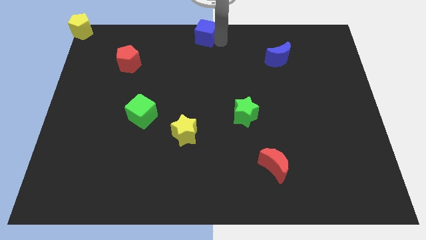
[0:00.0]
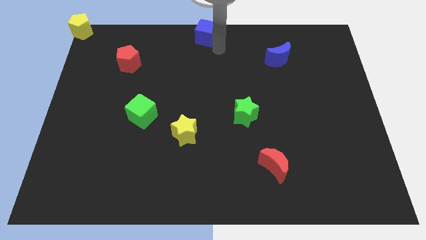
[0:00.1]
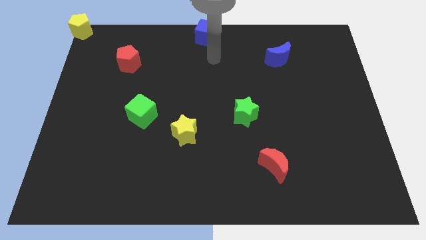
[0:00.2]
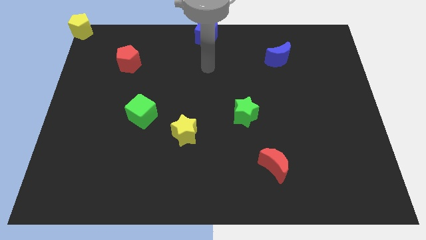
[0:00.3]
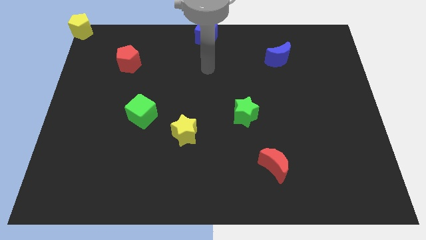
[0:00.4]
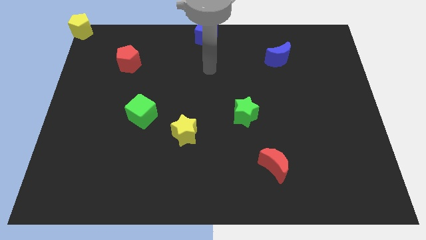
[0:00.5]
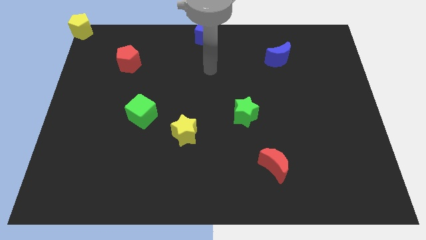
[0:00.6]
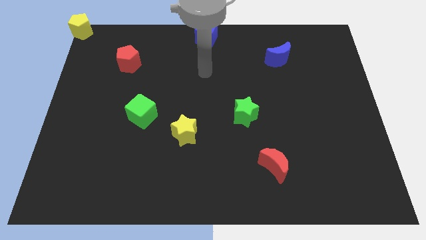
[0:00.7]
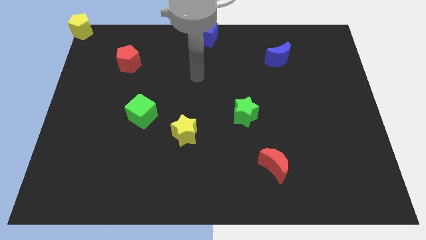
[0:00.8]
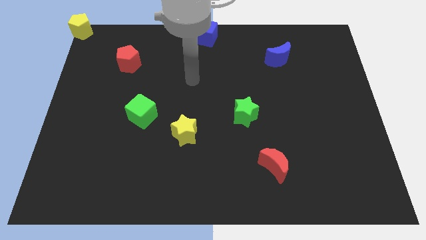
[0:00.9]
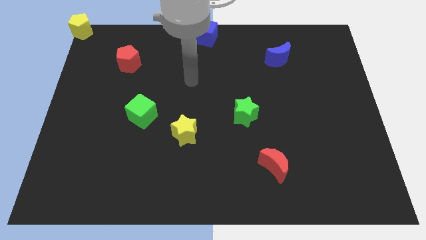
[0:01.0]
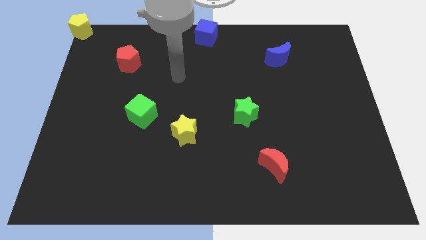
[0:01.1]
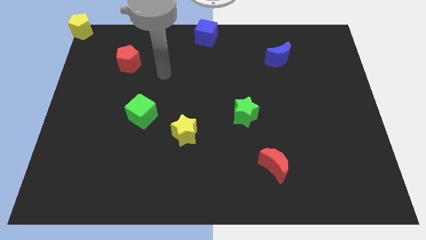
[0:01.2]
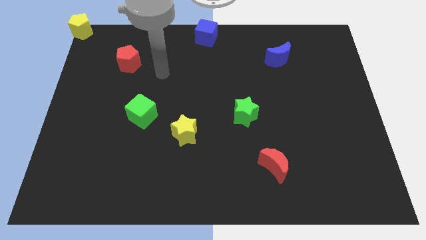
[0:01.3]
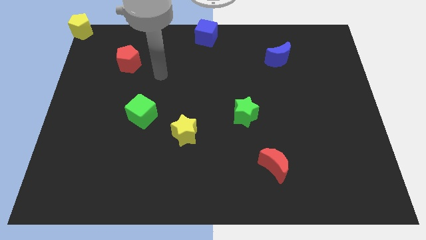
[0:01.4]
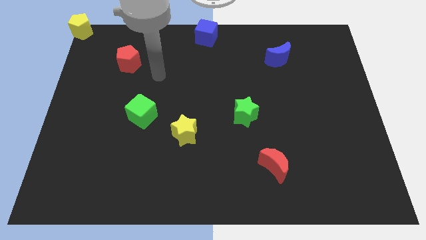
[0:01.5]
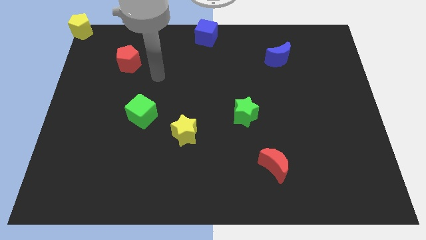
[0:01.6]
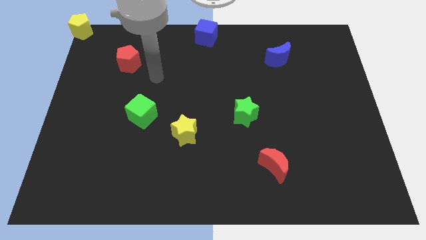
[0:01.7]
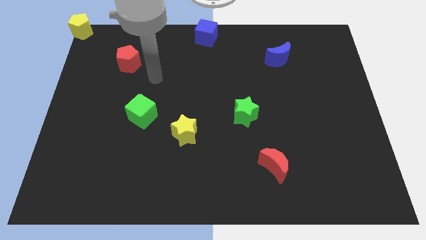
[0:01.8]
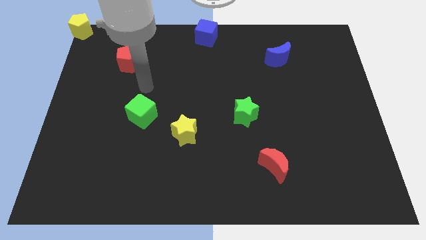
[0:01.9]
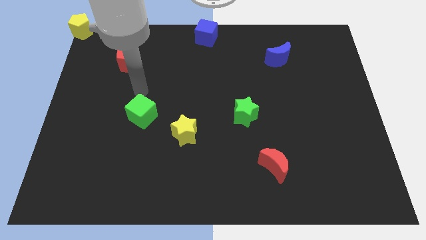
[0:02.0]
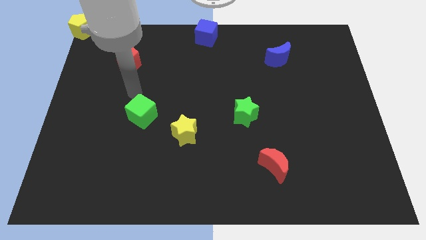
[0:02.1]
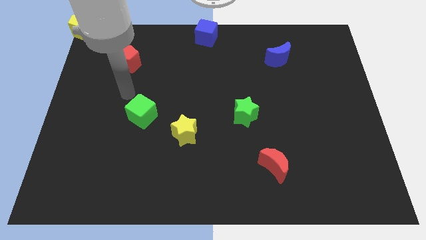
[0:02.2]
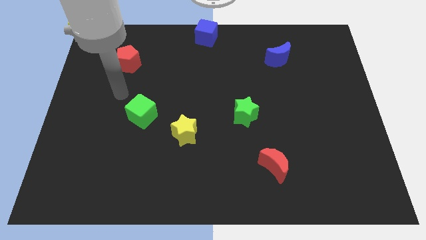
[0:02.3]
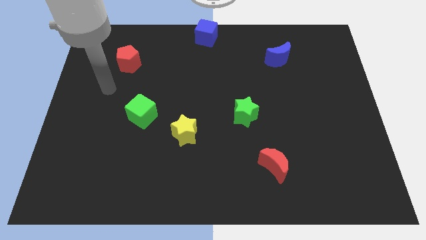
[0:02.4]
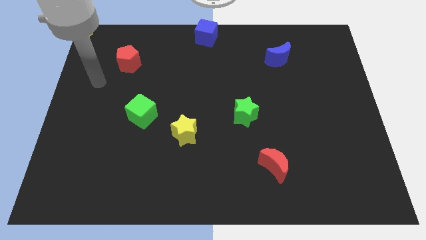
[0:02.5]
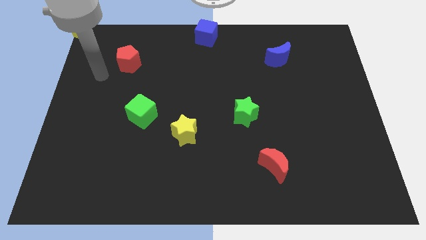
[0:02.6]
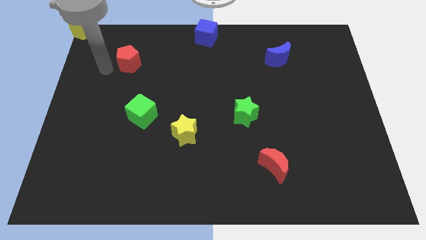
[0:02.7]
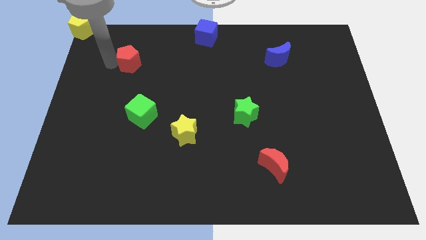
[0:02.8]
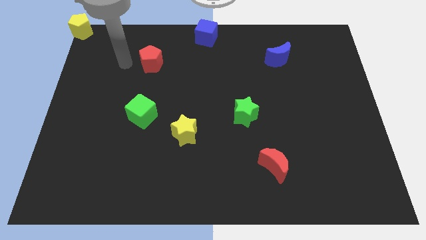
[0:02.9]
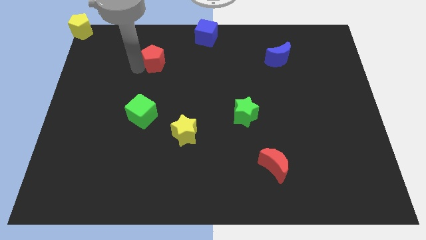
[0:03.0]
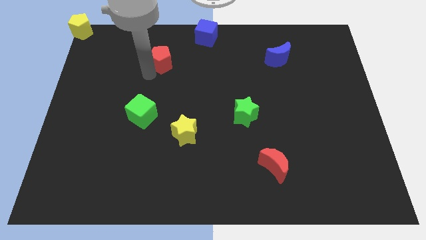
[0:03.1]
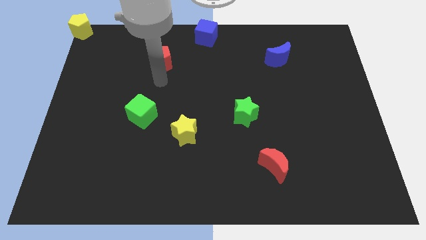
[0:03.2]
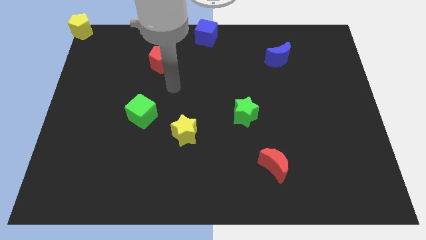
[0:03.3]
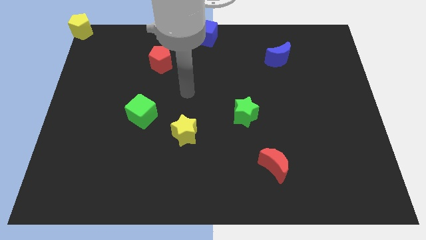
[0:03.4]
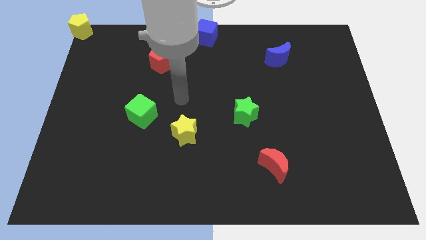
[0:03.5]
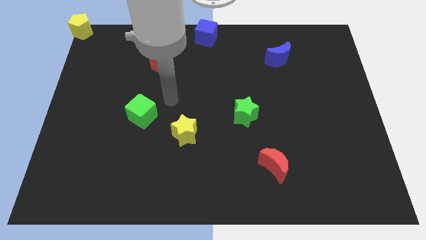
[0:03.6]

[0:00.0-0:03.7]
place the red pentagon diagonally to blue cube

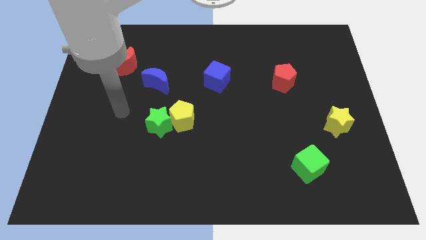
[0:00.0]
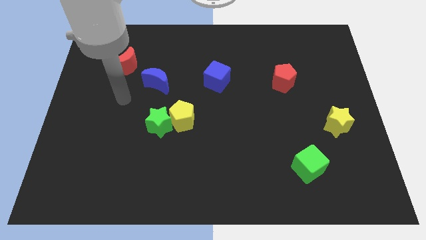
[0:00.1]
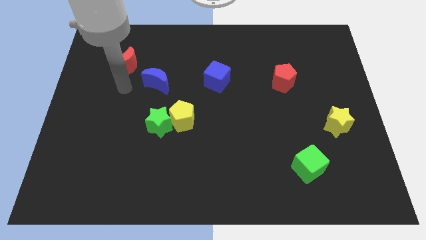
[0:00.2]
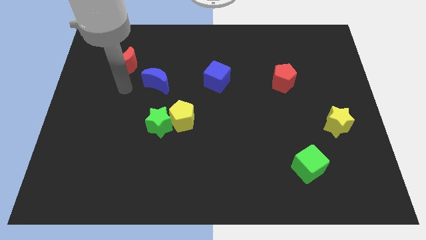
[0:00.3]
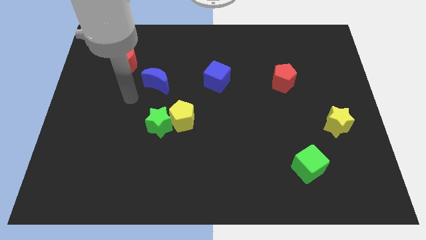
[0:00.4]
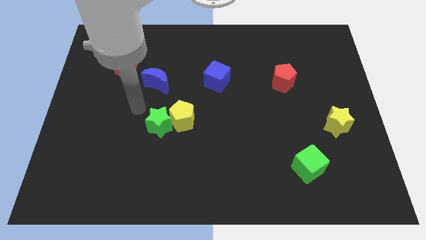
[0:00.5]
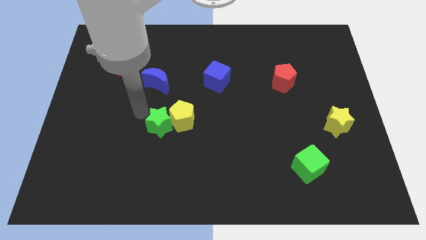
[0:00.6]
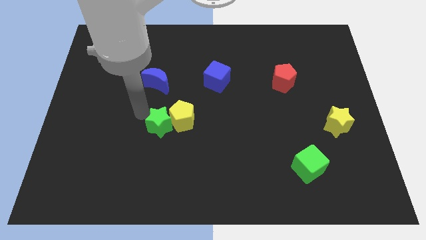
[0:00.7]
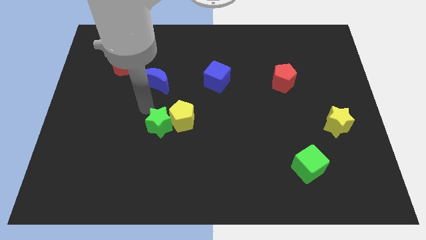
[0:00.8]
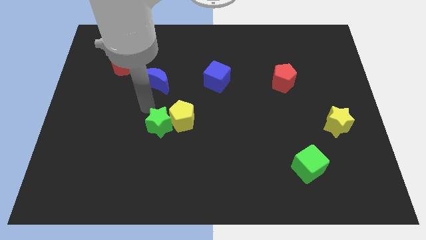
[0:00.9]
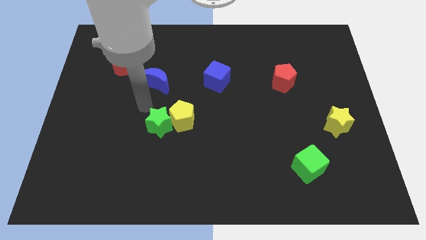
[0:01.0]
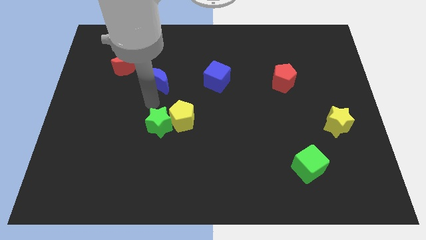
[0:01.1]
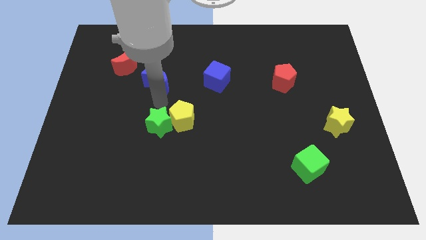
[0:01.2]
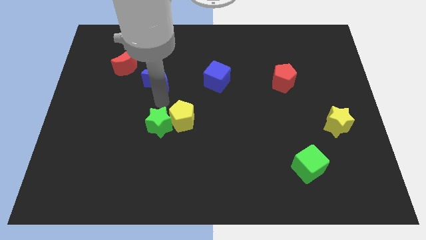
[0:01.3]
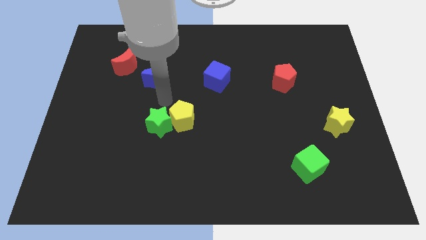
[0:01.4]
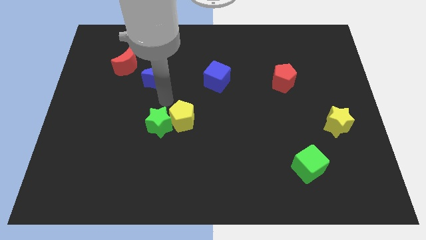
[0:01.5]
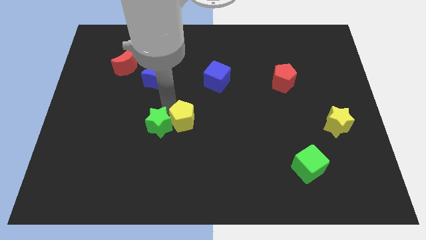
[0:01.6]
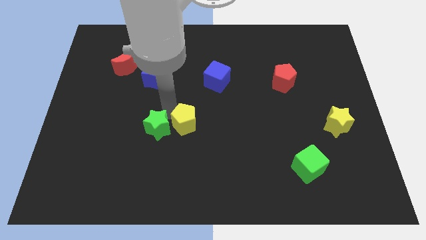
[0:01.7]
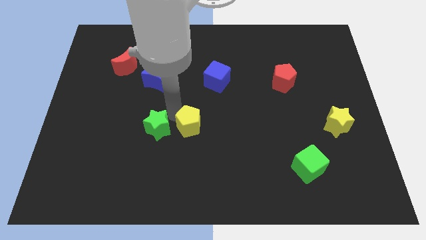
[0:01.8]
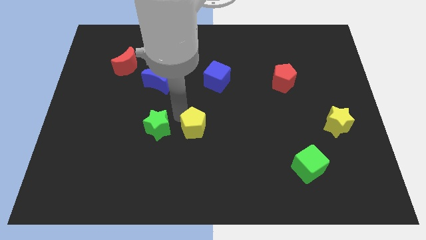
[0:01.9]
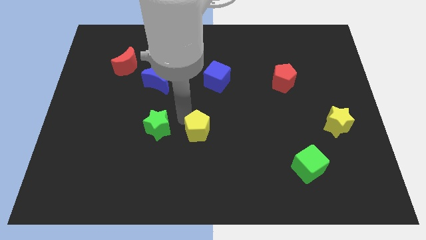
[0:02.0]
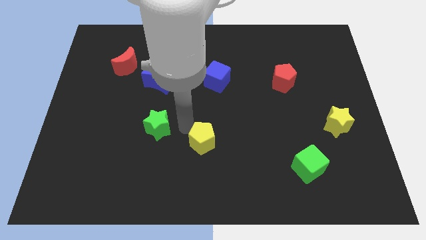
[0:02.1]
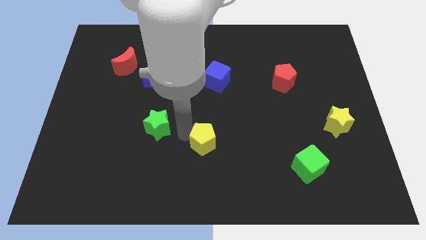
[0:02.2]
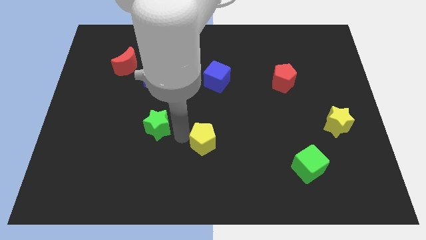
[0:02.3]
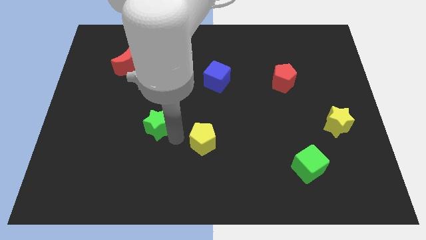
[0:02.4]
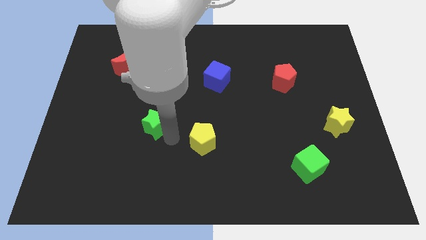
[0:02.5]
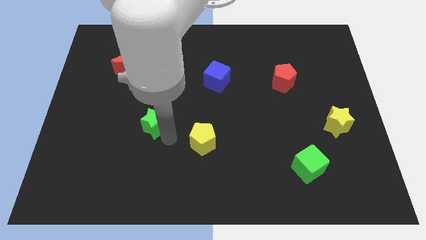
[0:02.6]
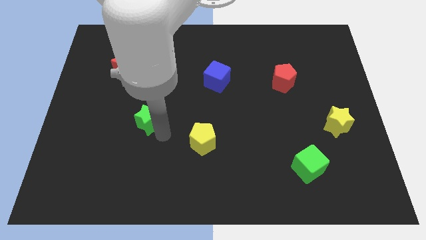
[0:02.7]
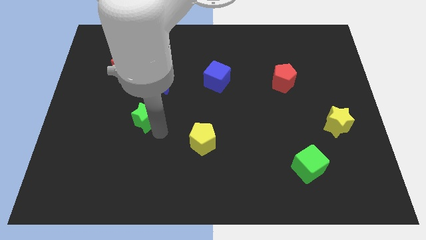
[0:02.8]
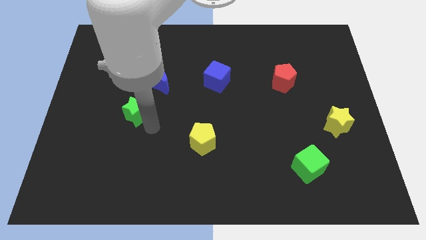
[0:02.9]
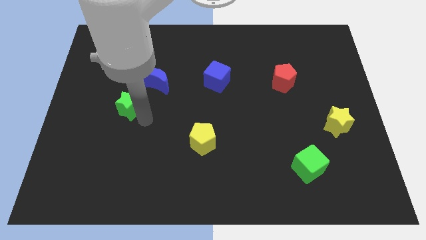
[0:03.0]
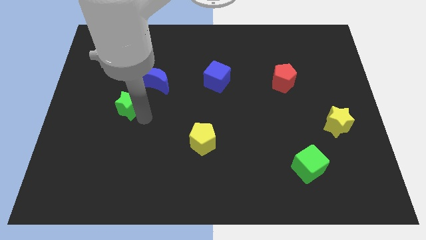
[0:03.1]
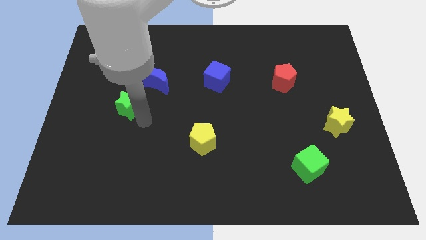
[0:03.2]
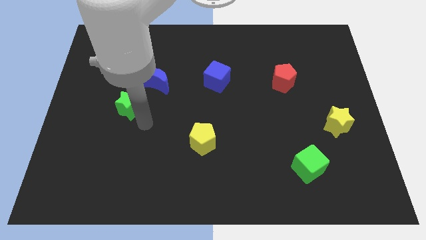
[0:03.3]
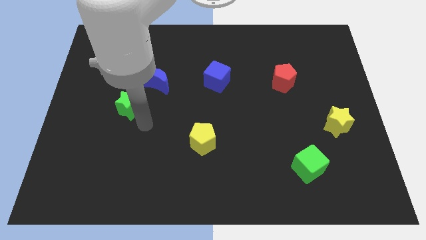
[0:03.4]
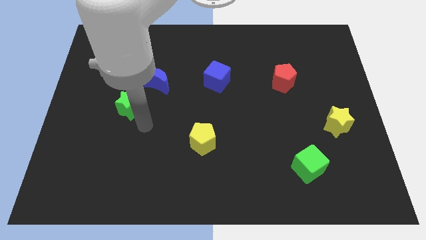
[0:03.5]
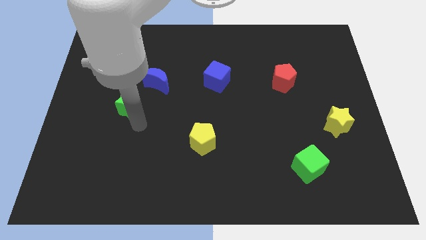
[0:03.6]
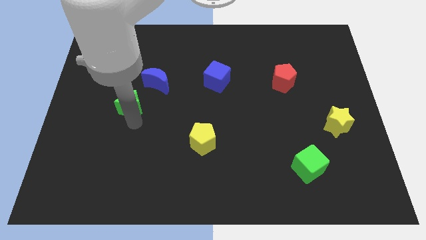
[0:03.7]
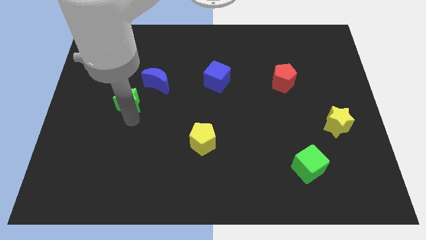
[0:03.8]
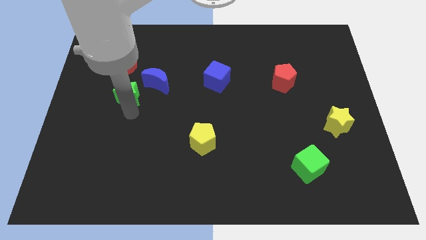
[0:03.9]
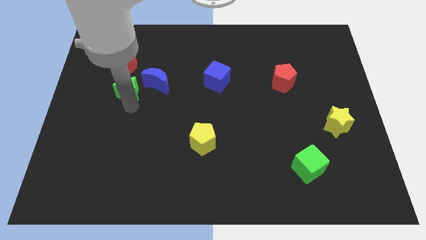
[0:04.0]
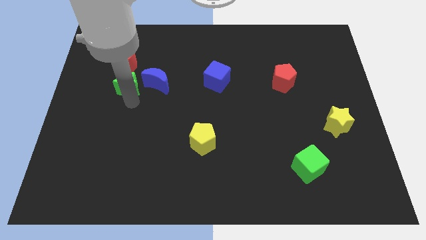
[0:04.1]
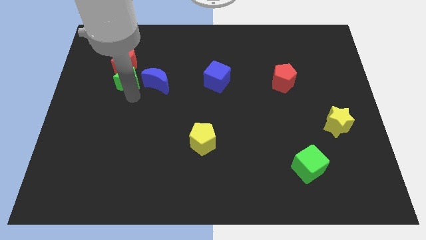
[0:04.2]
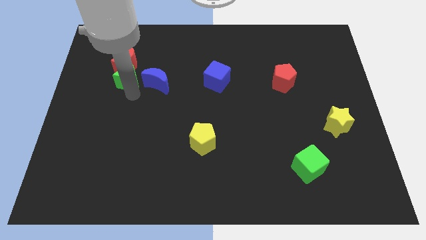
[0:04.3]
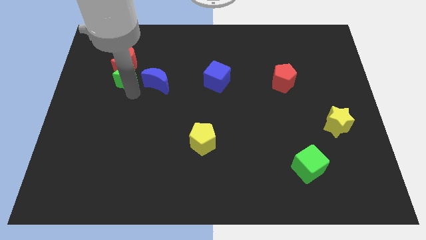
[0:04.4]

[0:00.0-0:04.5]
push the green star to the bottom of the red crescent

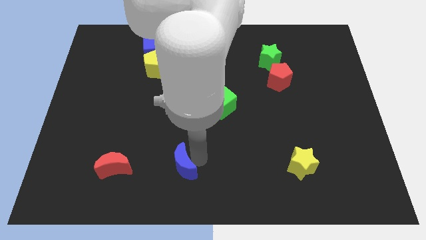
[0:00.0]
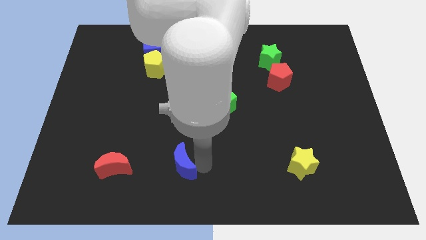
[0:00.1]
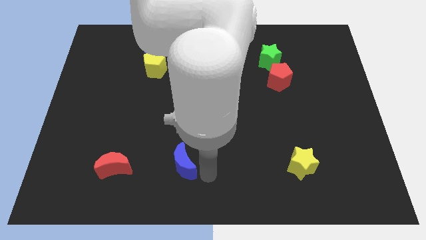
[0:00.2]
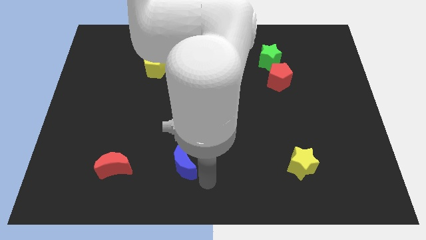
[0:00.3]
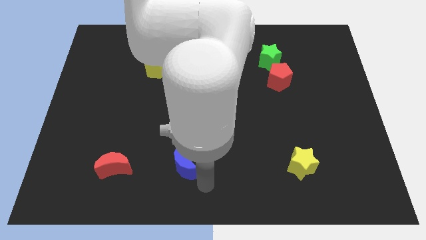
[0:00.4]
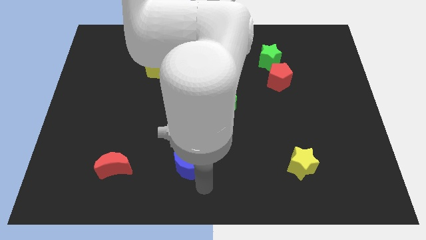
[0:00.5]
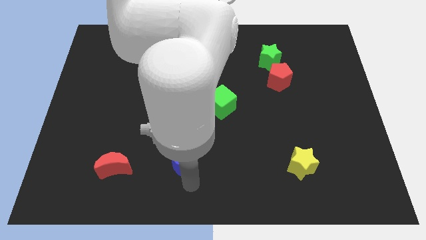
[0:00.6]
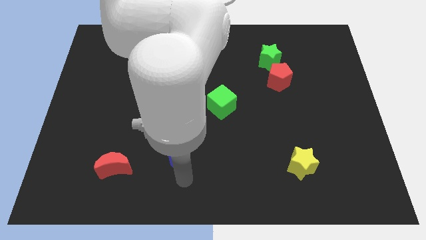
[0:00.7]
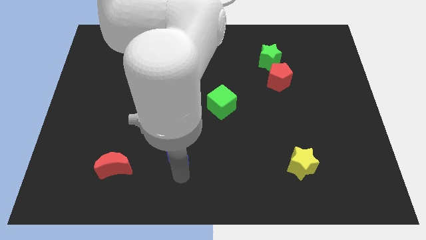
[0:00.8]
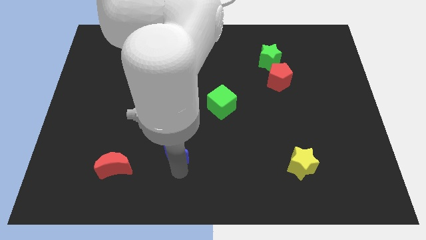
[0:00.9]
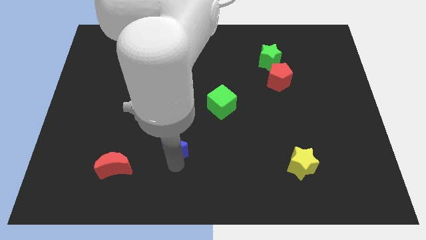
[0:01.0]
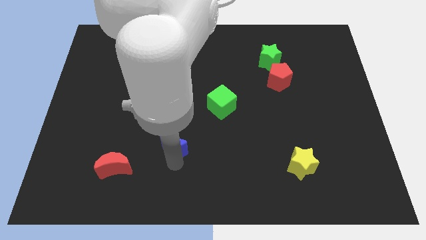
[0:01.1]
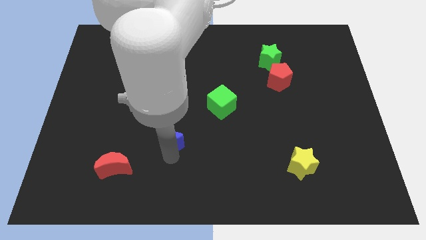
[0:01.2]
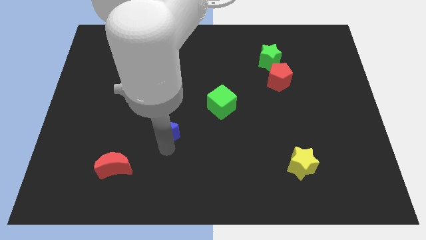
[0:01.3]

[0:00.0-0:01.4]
move the blue crescent in between the green cube and red crescent
